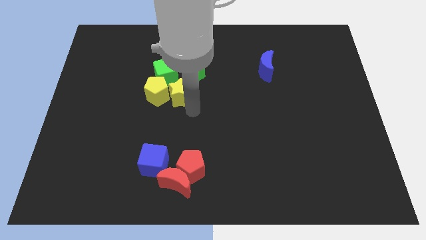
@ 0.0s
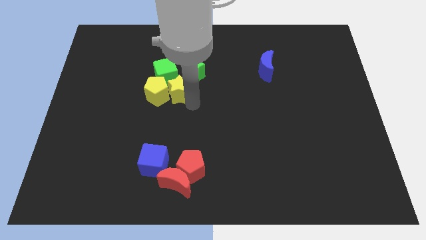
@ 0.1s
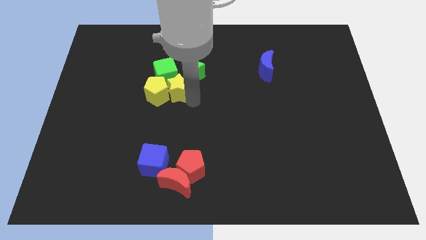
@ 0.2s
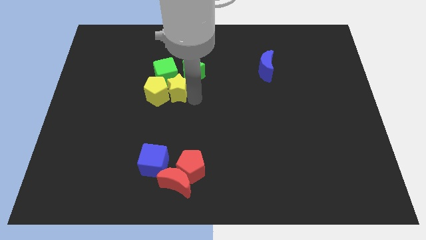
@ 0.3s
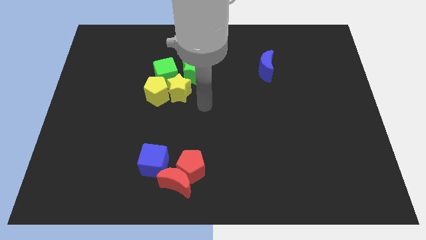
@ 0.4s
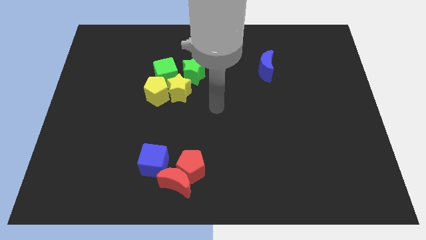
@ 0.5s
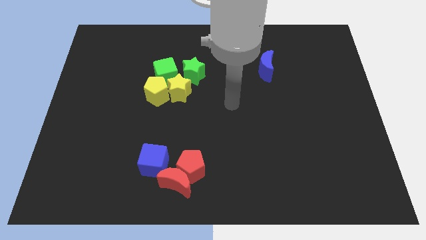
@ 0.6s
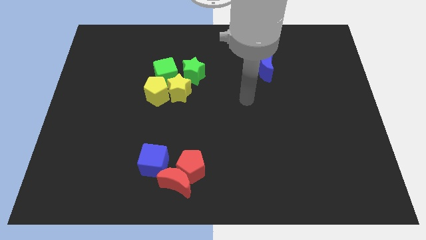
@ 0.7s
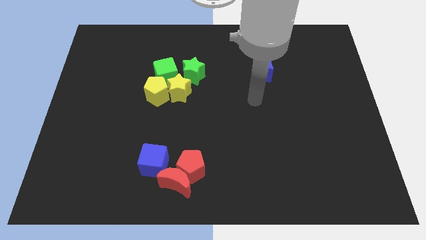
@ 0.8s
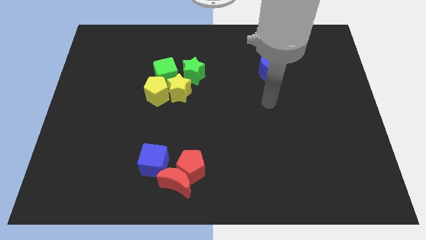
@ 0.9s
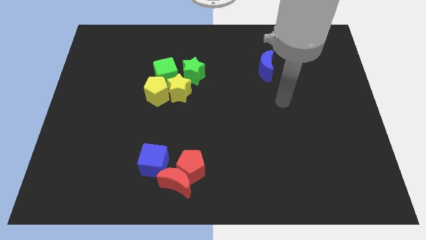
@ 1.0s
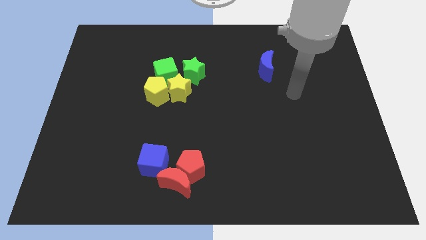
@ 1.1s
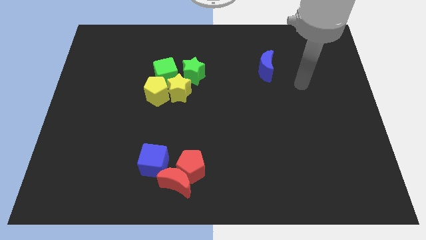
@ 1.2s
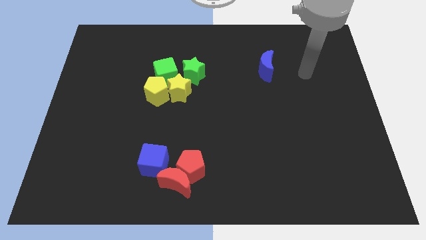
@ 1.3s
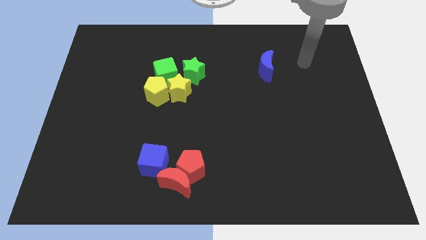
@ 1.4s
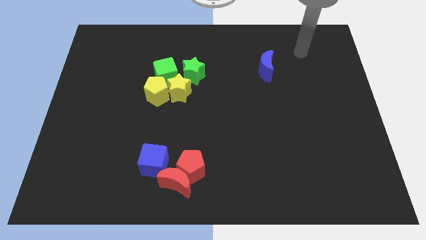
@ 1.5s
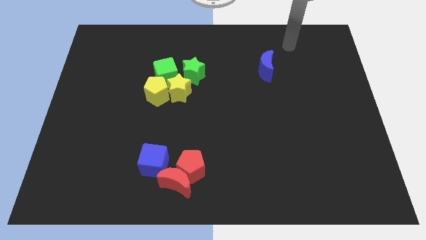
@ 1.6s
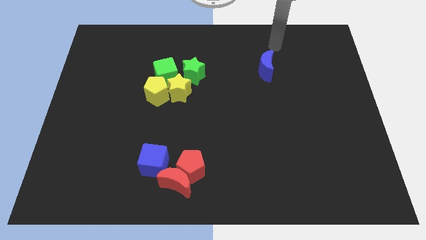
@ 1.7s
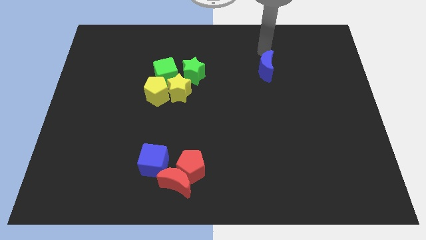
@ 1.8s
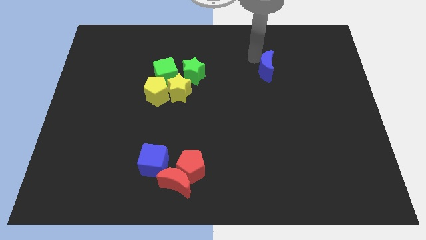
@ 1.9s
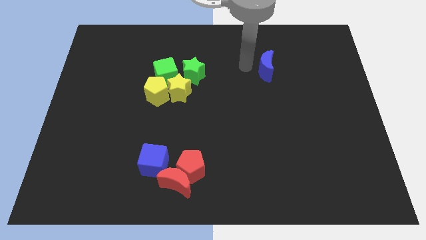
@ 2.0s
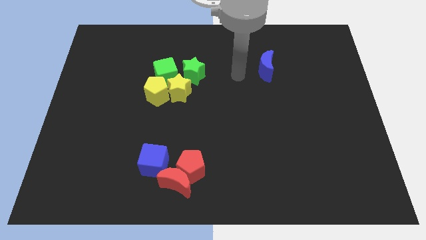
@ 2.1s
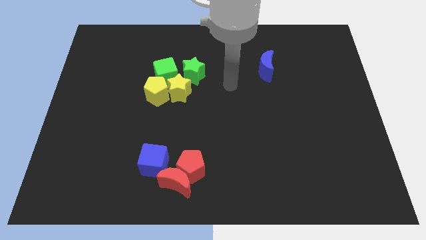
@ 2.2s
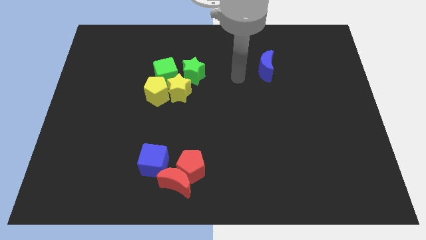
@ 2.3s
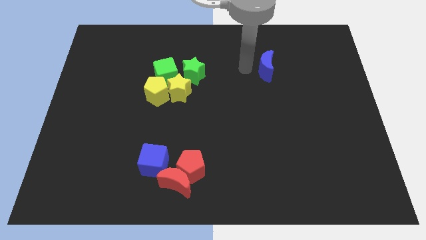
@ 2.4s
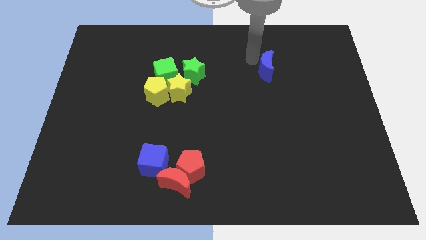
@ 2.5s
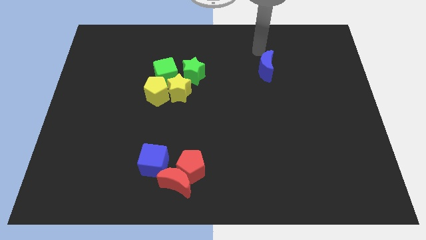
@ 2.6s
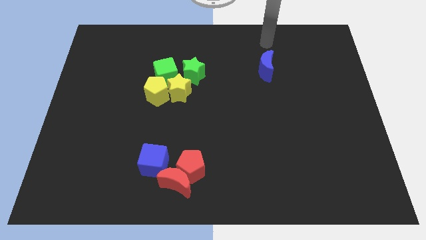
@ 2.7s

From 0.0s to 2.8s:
move the arm to the blue moon

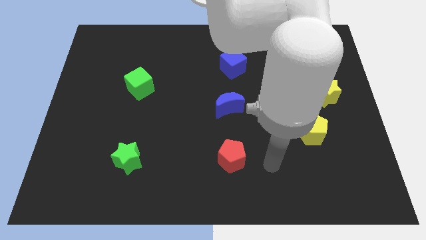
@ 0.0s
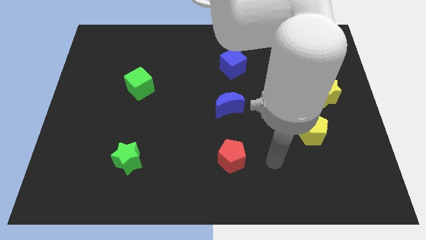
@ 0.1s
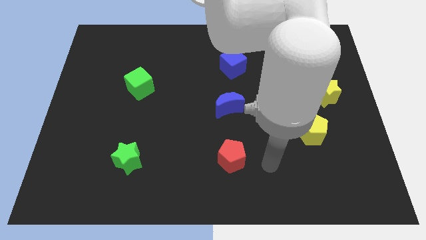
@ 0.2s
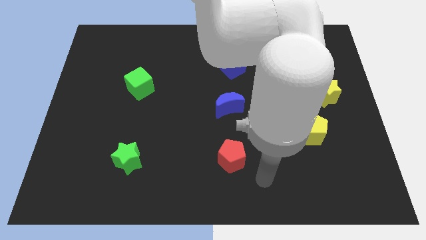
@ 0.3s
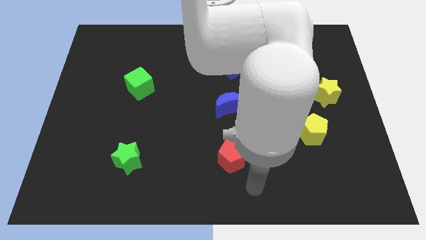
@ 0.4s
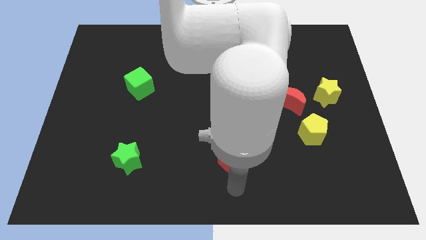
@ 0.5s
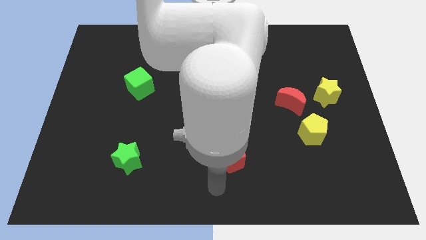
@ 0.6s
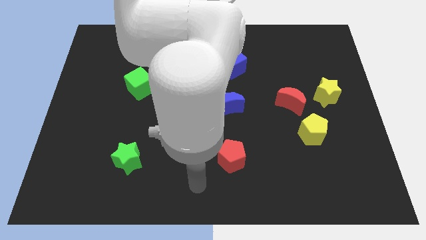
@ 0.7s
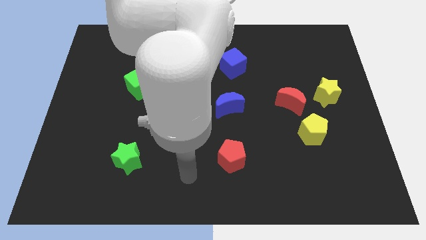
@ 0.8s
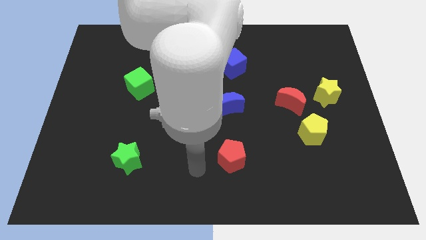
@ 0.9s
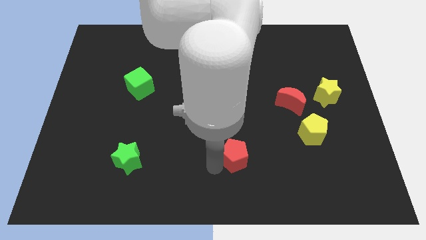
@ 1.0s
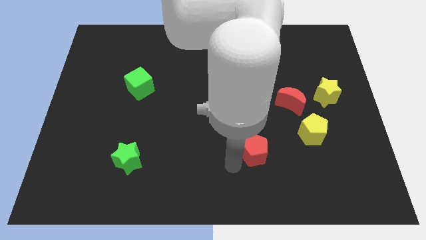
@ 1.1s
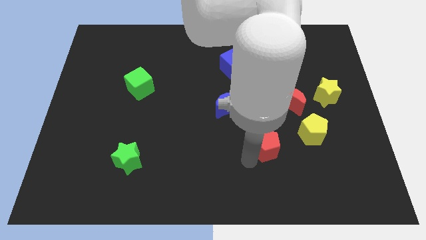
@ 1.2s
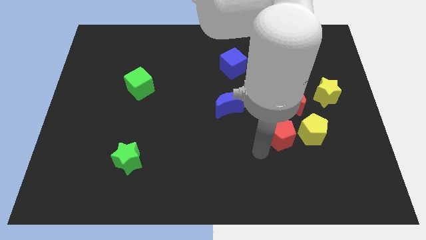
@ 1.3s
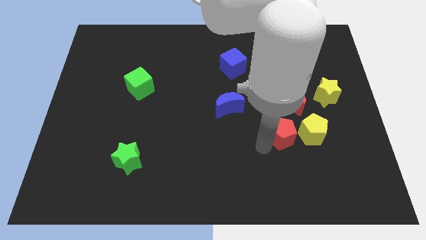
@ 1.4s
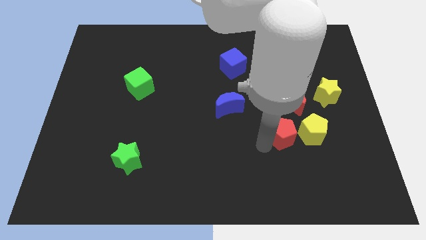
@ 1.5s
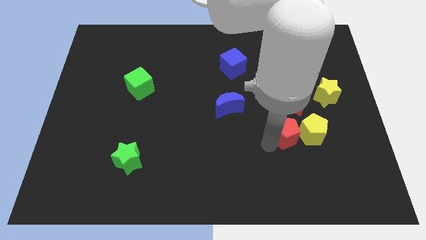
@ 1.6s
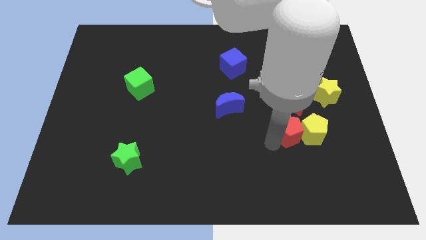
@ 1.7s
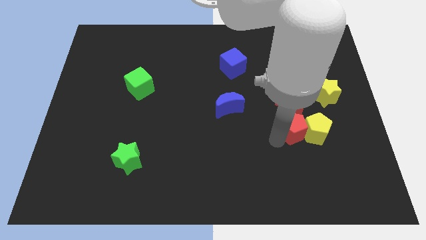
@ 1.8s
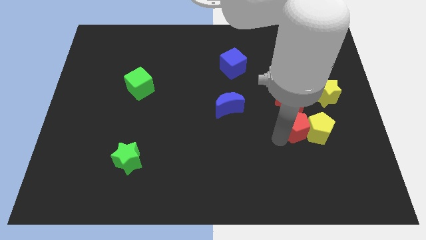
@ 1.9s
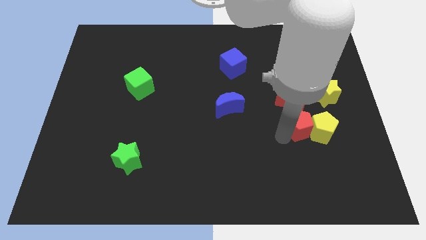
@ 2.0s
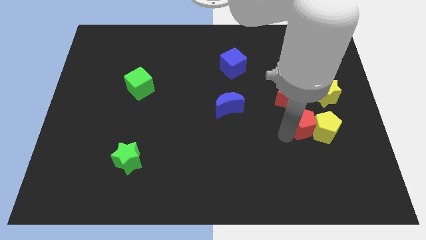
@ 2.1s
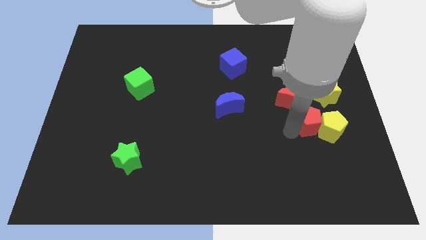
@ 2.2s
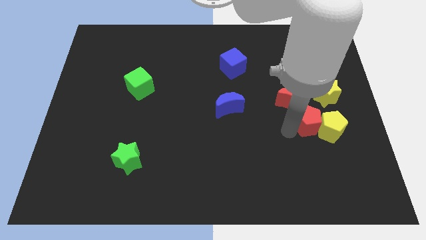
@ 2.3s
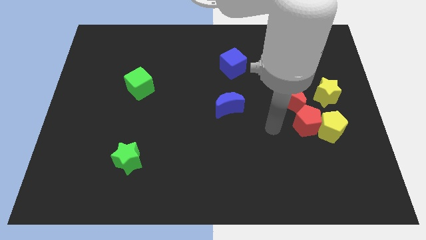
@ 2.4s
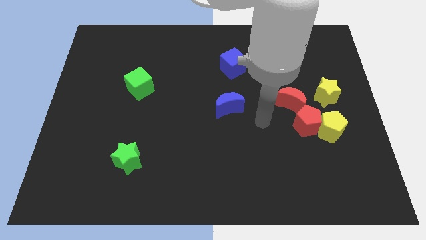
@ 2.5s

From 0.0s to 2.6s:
push the red pentagon diagonal to the yellow star

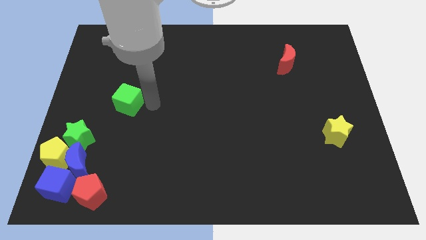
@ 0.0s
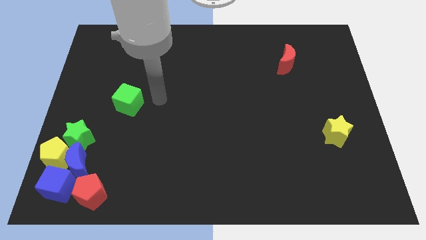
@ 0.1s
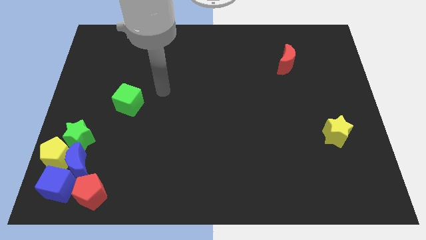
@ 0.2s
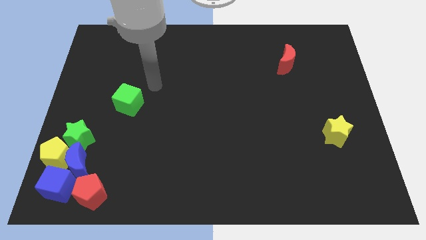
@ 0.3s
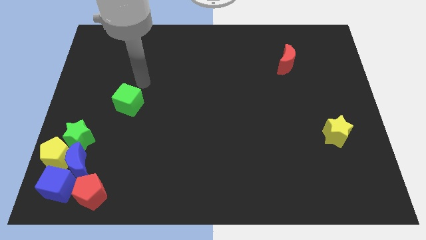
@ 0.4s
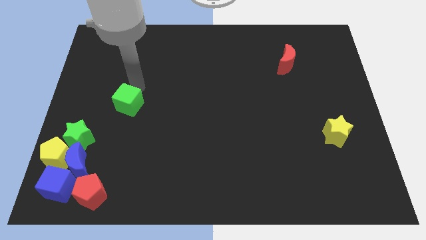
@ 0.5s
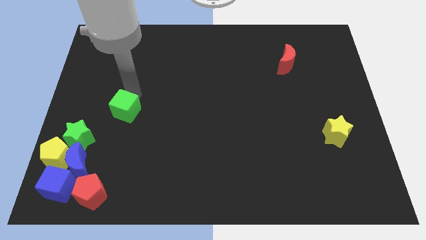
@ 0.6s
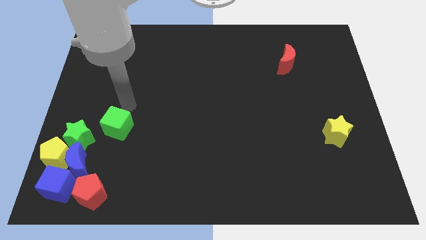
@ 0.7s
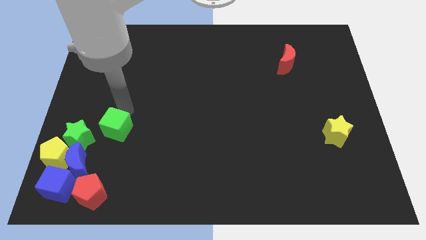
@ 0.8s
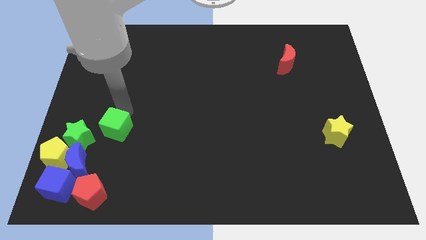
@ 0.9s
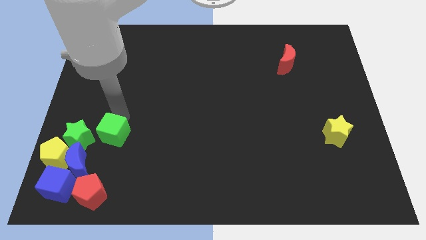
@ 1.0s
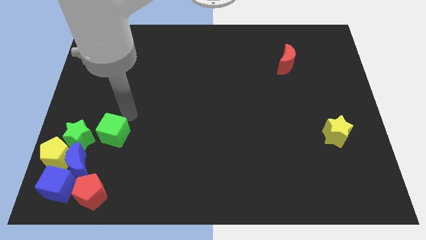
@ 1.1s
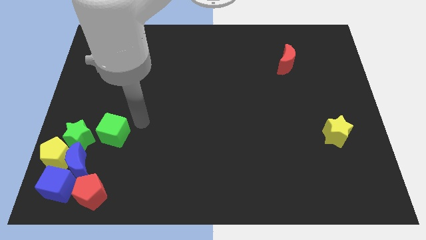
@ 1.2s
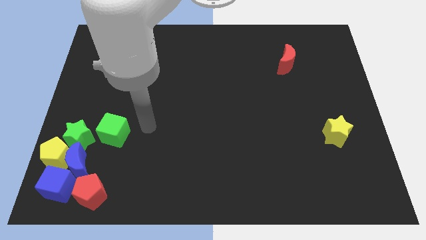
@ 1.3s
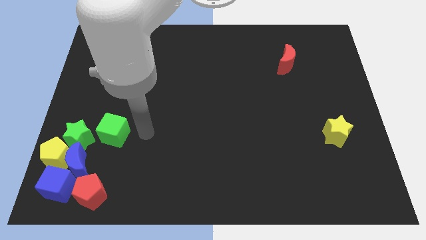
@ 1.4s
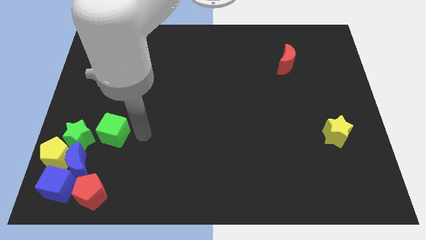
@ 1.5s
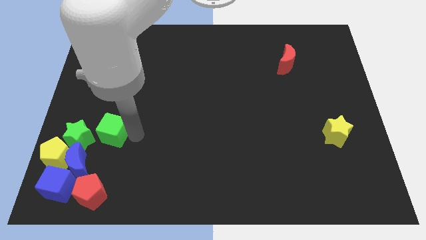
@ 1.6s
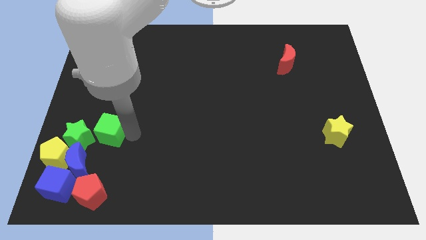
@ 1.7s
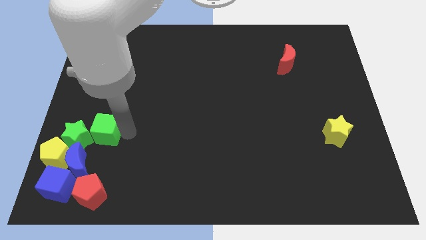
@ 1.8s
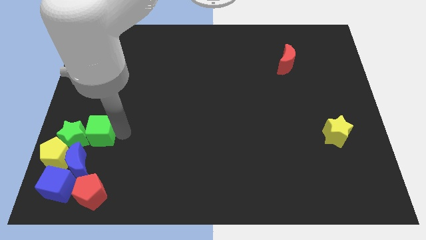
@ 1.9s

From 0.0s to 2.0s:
place the green cube right to the green star

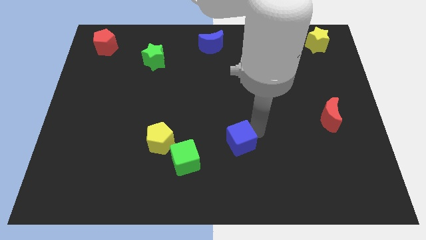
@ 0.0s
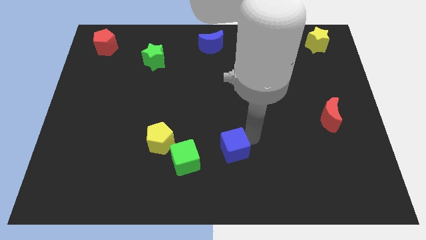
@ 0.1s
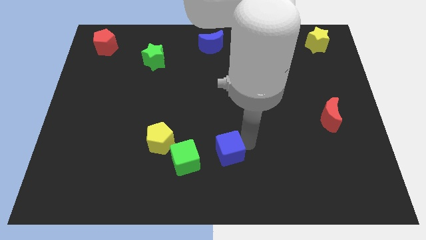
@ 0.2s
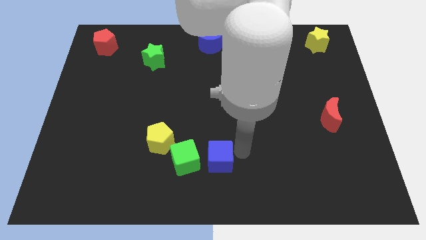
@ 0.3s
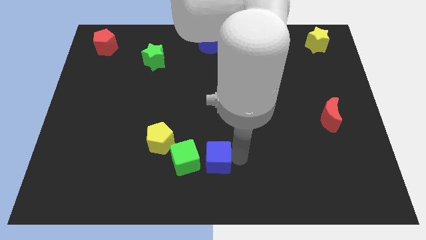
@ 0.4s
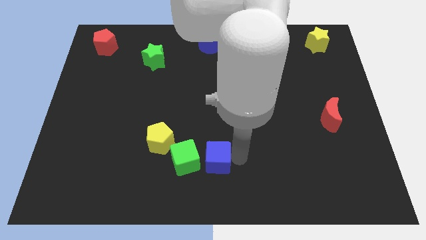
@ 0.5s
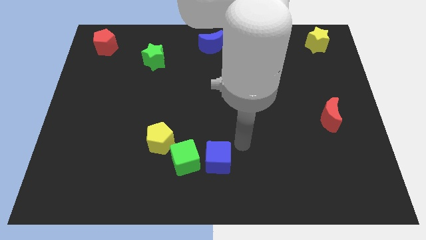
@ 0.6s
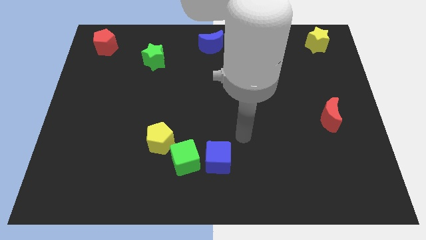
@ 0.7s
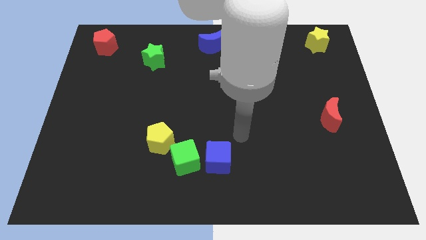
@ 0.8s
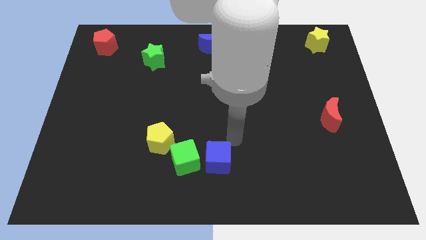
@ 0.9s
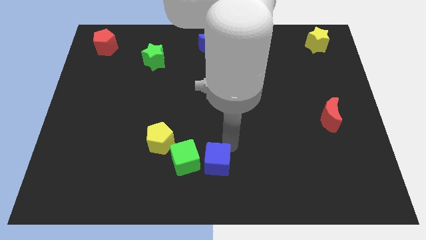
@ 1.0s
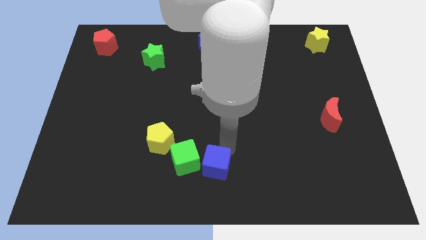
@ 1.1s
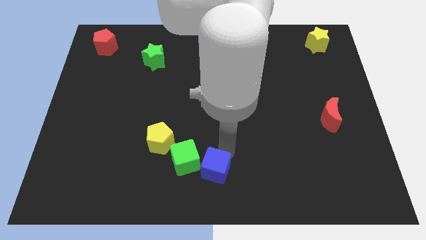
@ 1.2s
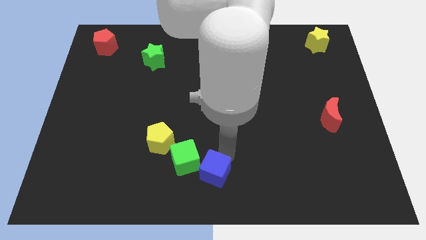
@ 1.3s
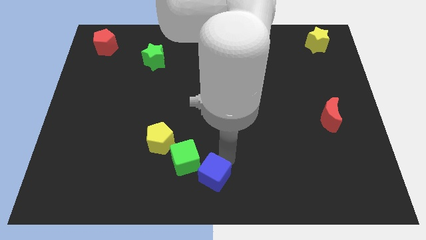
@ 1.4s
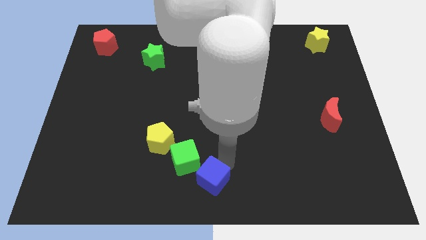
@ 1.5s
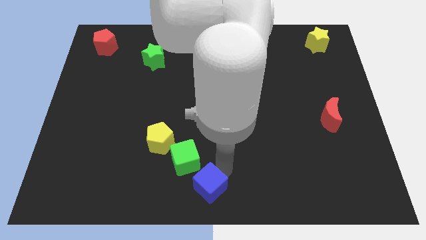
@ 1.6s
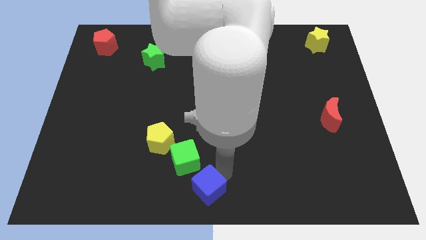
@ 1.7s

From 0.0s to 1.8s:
push the blue cube slightly towards the bottom center of the board
